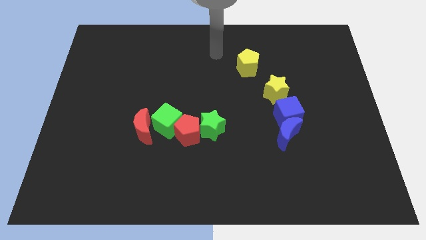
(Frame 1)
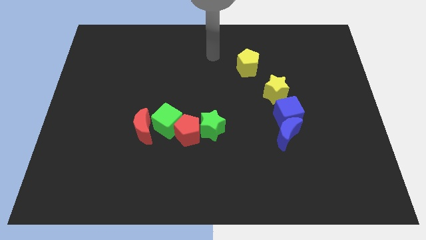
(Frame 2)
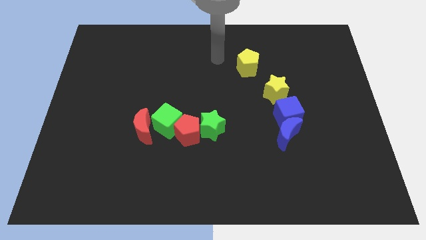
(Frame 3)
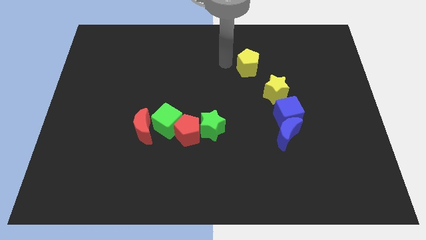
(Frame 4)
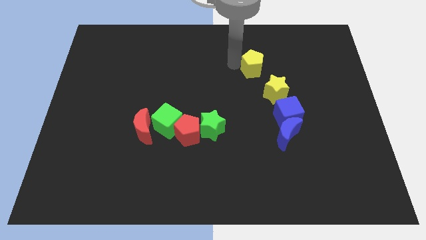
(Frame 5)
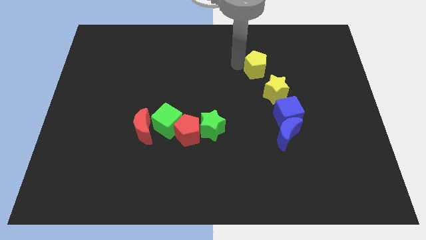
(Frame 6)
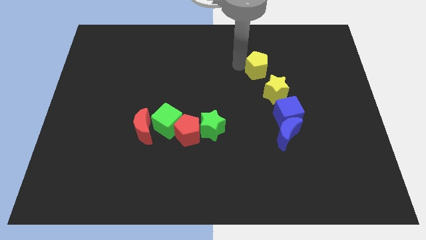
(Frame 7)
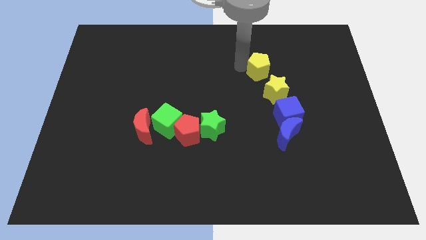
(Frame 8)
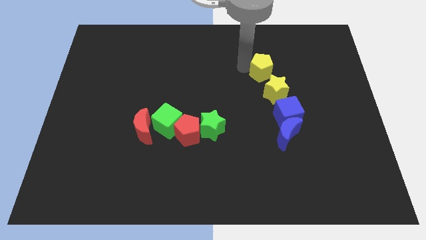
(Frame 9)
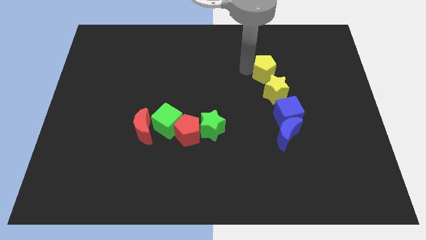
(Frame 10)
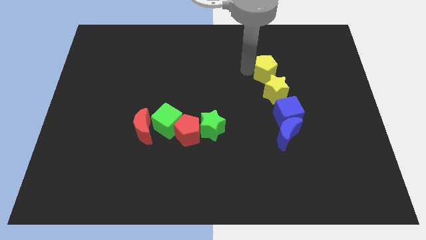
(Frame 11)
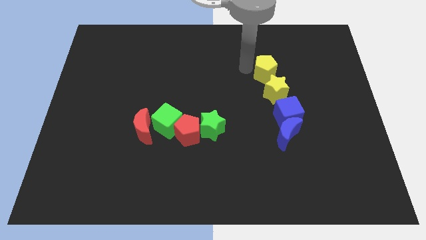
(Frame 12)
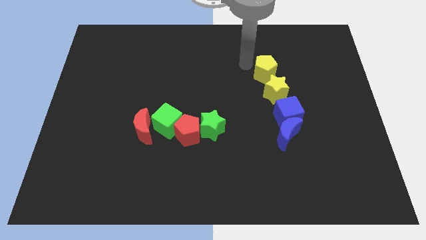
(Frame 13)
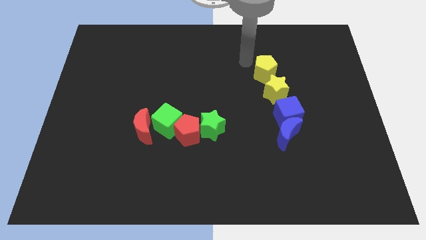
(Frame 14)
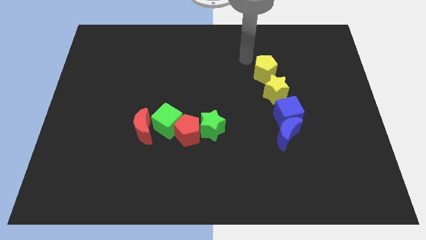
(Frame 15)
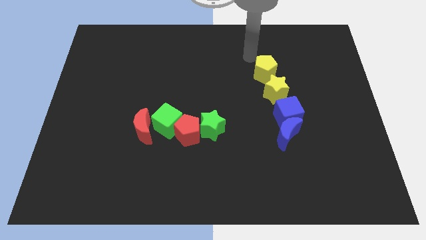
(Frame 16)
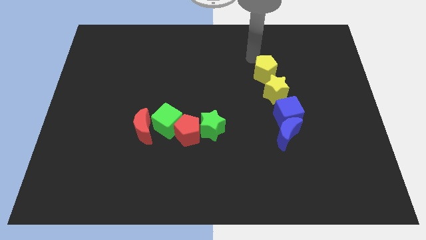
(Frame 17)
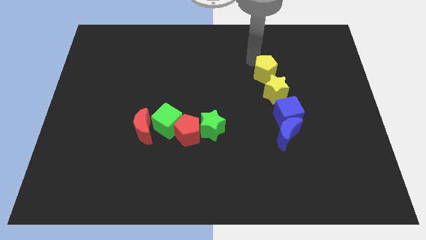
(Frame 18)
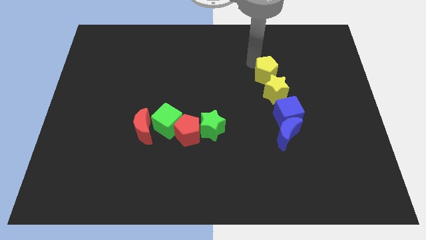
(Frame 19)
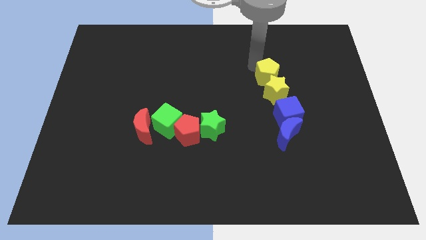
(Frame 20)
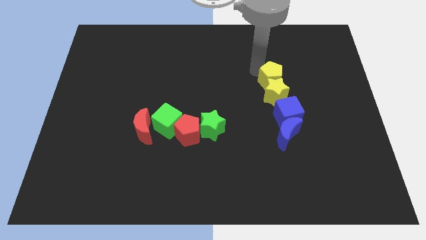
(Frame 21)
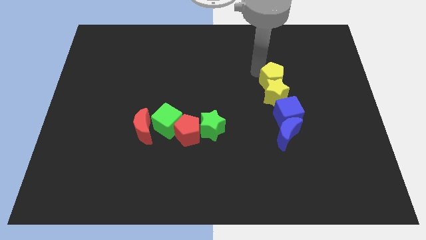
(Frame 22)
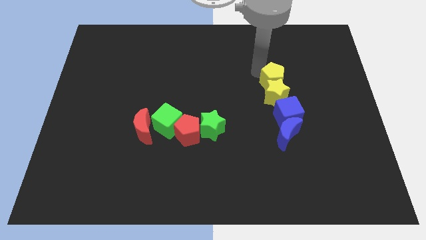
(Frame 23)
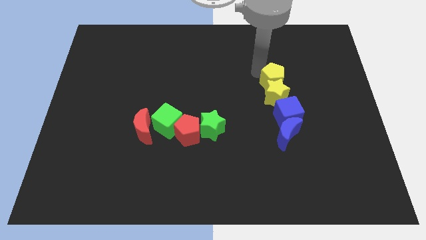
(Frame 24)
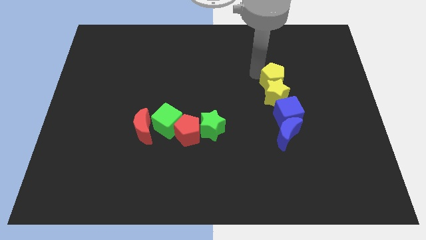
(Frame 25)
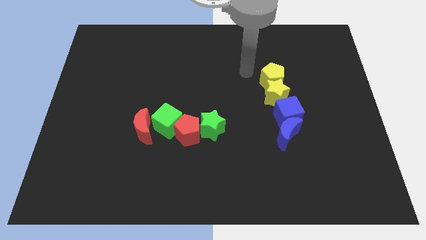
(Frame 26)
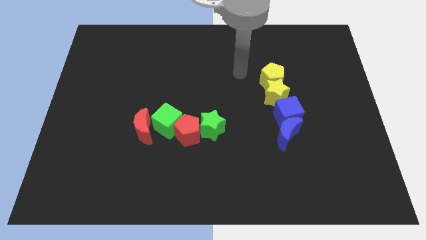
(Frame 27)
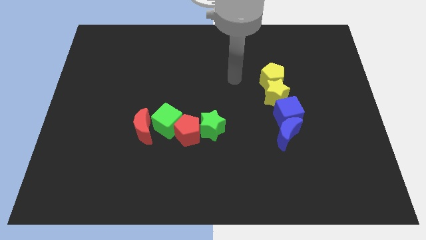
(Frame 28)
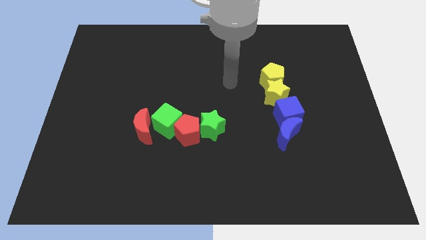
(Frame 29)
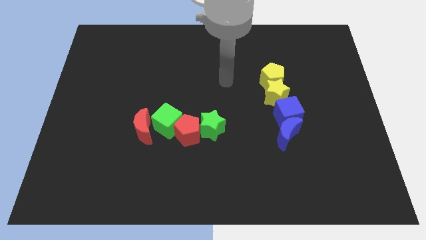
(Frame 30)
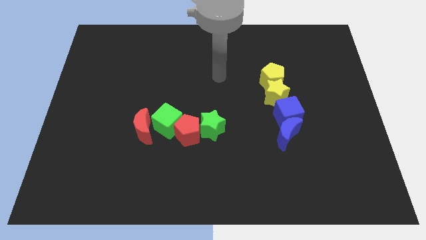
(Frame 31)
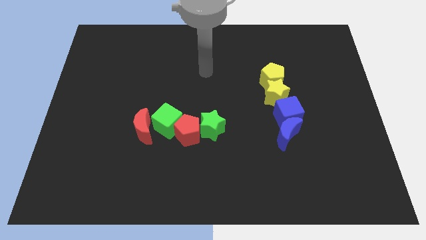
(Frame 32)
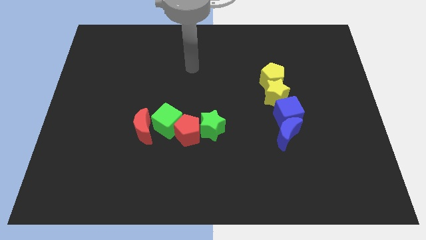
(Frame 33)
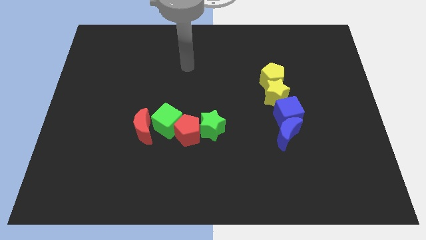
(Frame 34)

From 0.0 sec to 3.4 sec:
move the yellow pentagon into the top side of the yellow star

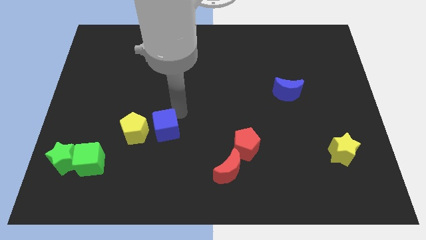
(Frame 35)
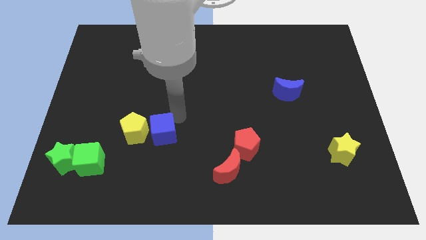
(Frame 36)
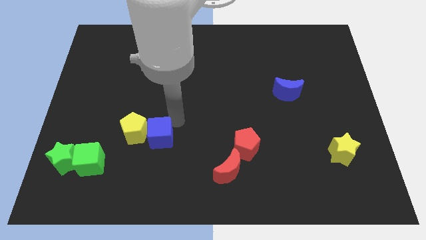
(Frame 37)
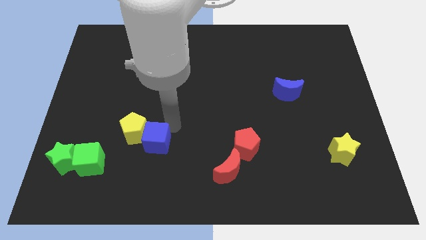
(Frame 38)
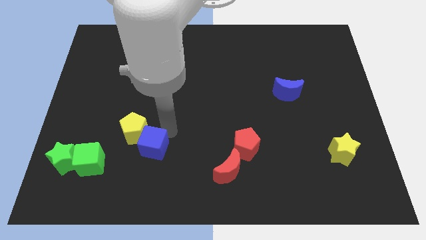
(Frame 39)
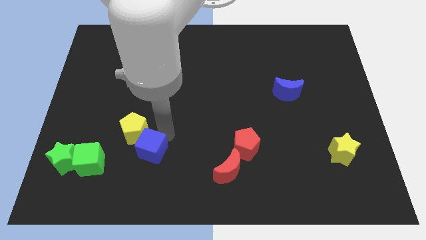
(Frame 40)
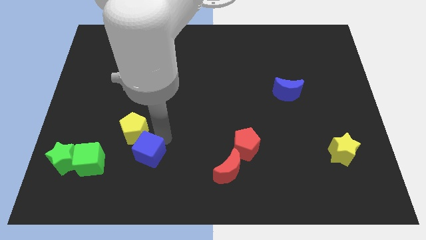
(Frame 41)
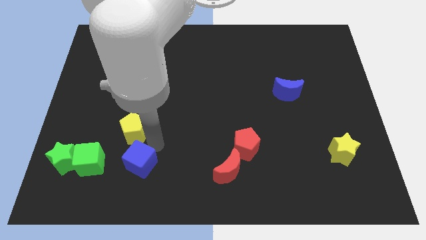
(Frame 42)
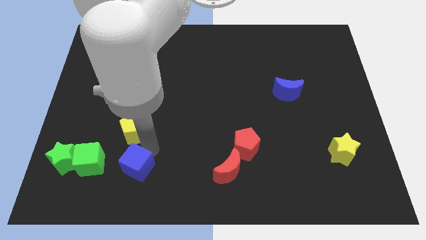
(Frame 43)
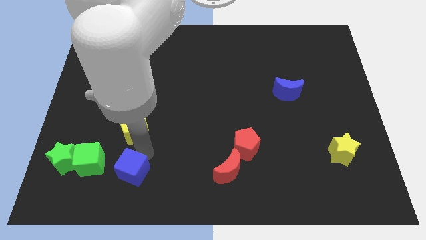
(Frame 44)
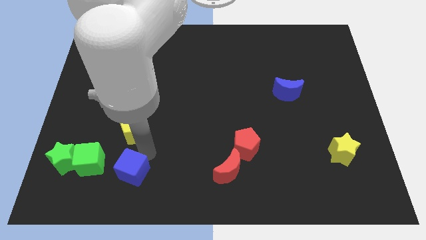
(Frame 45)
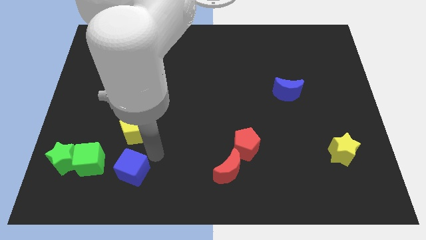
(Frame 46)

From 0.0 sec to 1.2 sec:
move the blue cube to the bottom of the yellow pentagon

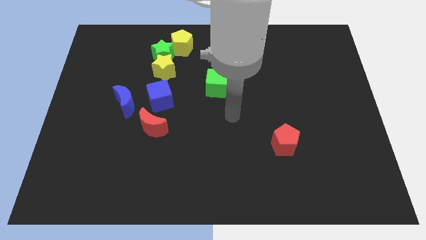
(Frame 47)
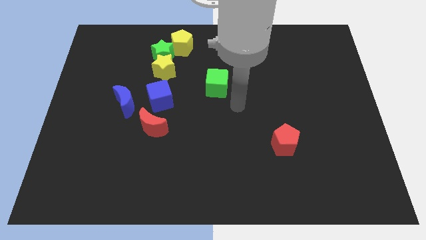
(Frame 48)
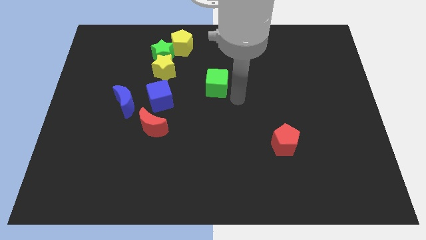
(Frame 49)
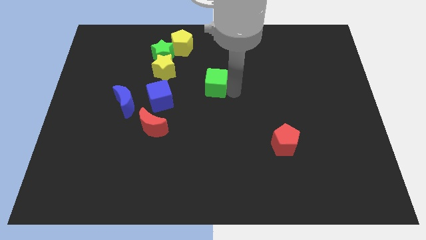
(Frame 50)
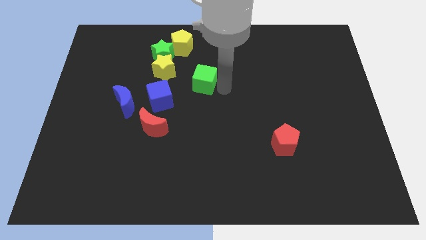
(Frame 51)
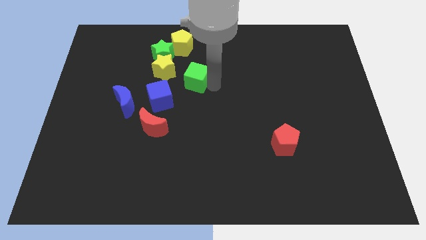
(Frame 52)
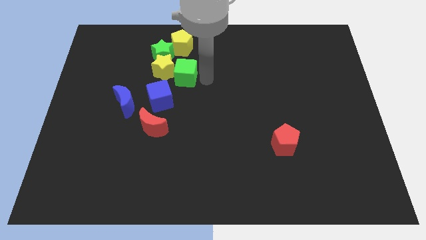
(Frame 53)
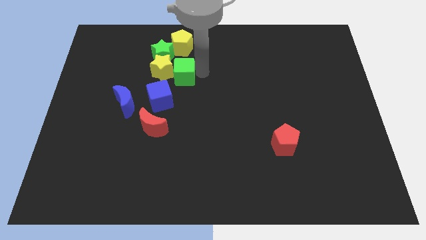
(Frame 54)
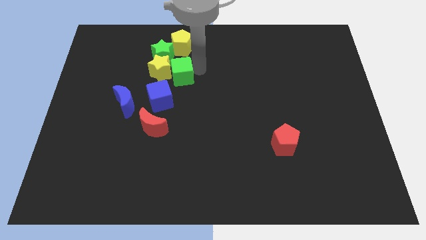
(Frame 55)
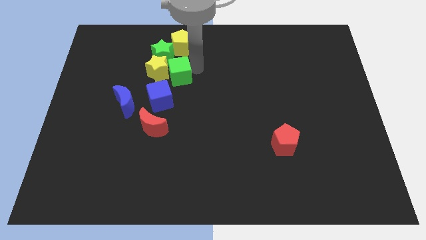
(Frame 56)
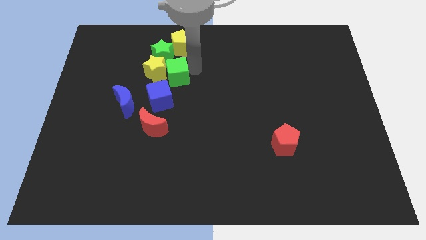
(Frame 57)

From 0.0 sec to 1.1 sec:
push the green cube into the yellow star

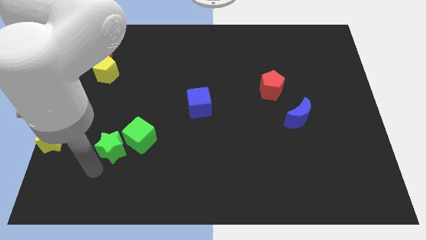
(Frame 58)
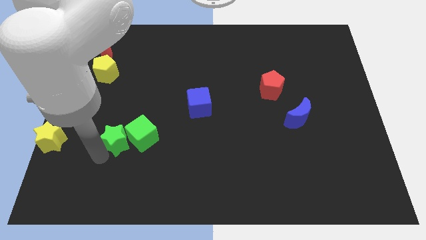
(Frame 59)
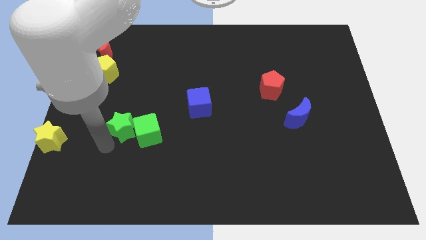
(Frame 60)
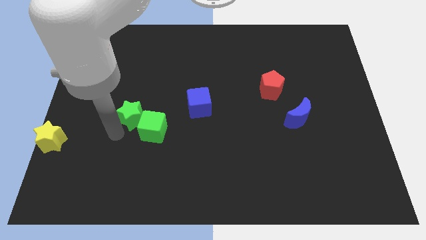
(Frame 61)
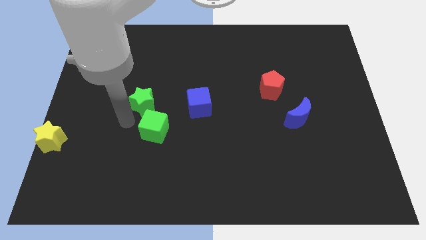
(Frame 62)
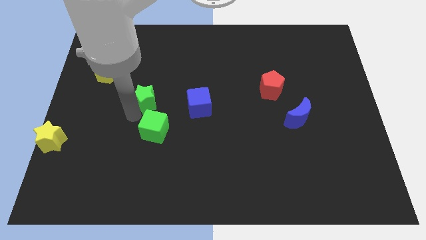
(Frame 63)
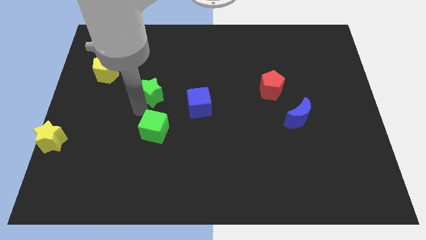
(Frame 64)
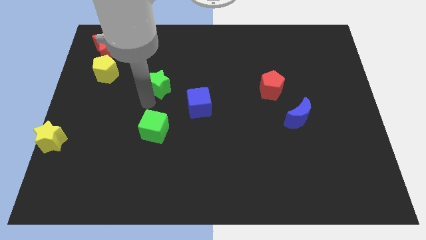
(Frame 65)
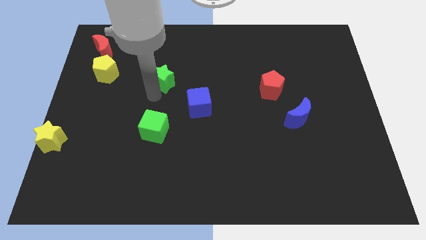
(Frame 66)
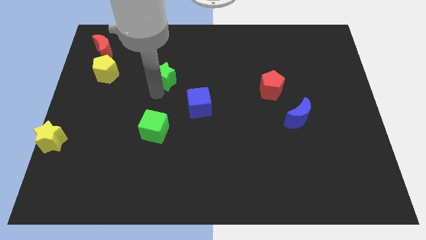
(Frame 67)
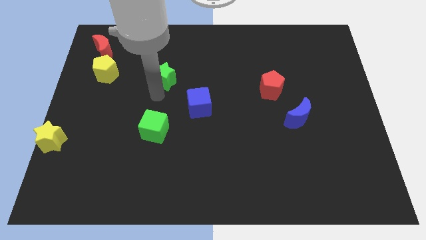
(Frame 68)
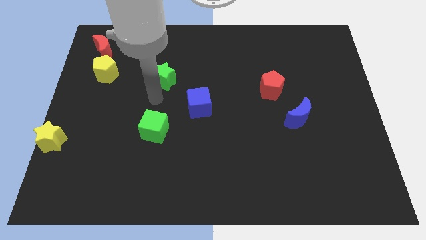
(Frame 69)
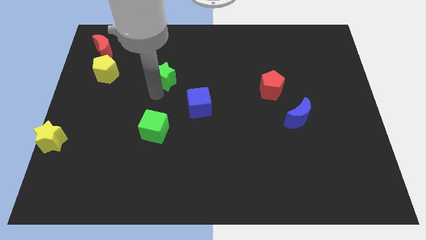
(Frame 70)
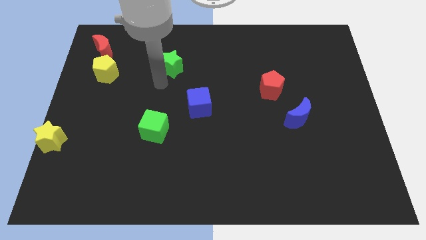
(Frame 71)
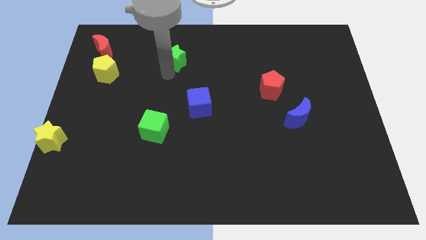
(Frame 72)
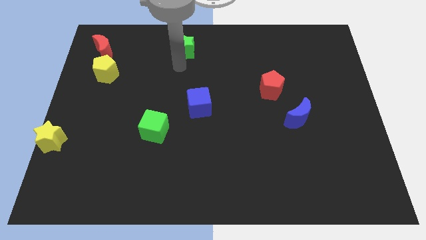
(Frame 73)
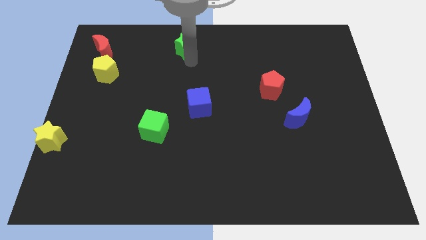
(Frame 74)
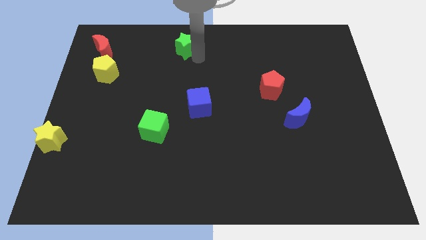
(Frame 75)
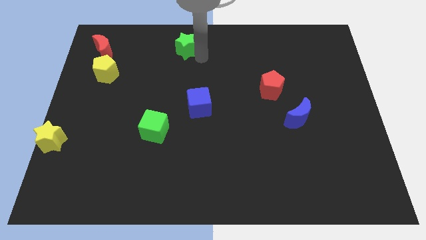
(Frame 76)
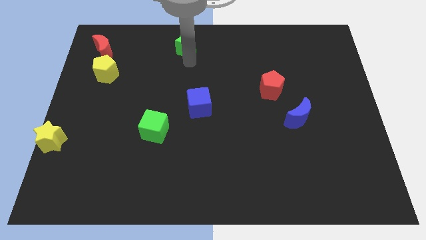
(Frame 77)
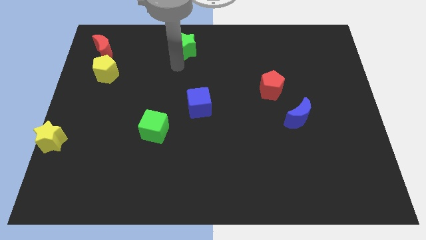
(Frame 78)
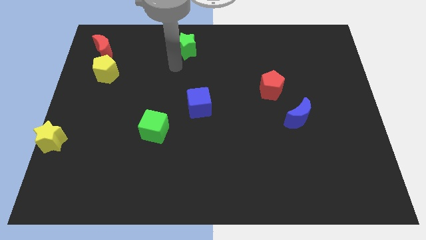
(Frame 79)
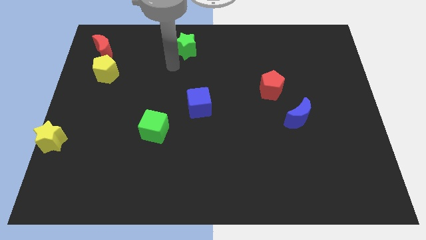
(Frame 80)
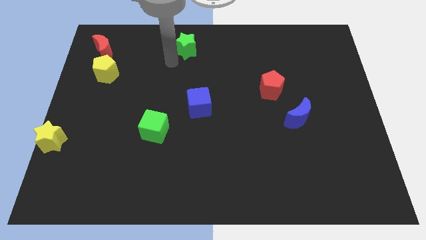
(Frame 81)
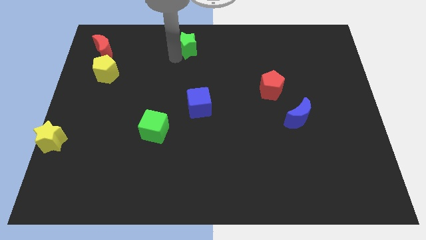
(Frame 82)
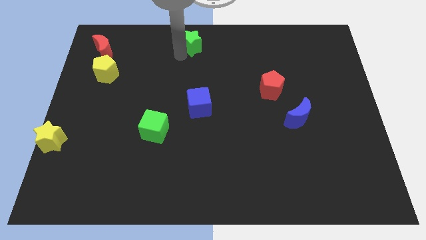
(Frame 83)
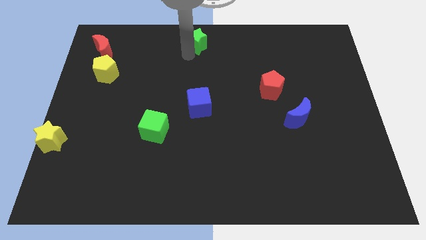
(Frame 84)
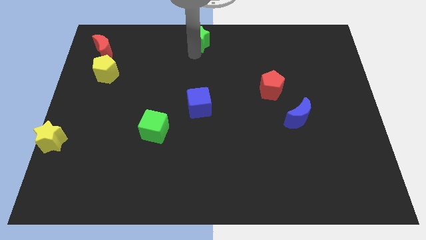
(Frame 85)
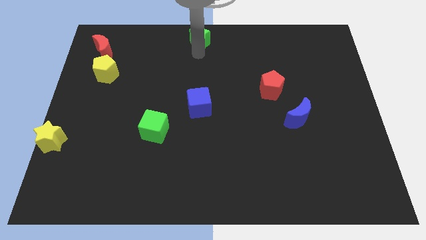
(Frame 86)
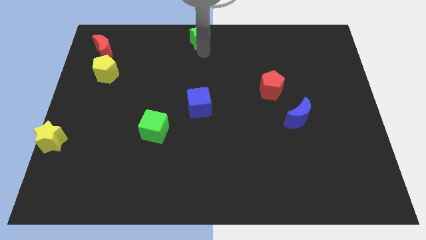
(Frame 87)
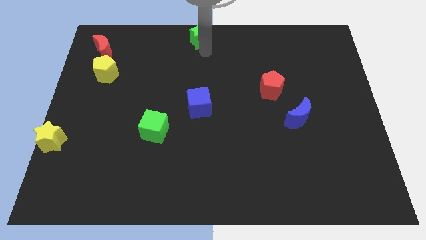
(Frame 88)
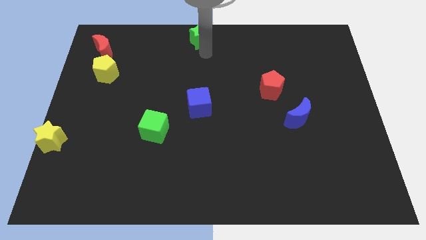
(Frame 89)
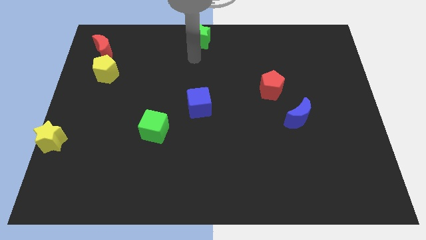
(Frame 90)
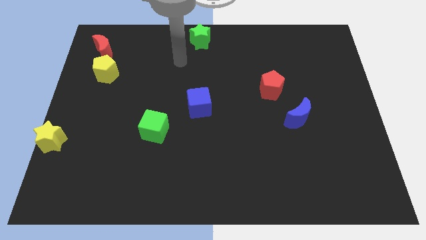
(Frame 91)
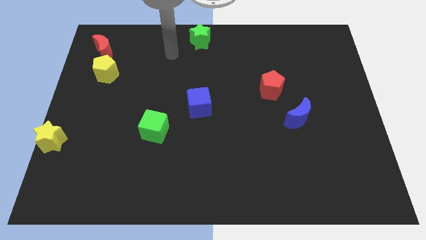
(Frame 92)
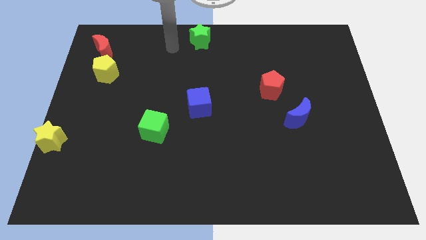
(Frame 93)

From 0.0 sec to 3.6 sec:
place green star to the top center of the board
